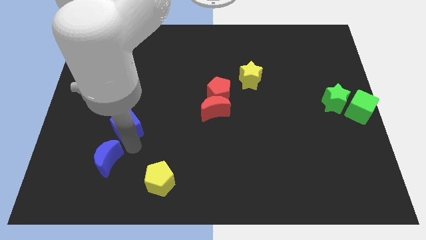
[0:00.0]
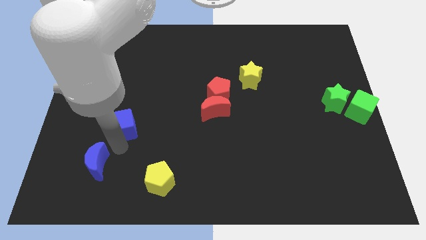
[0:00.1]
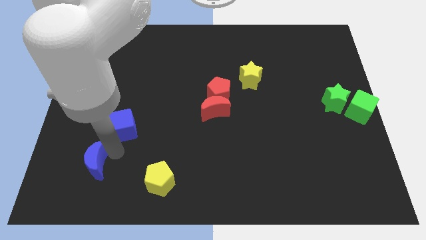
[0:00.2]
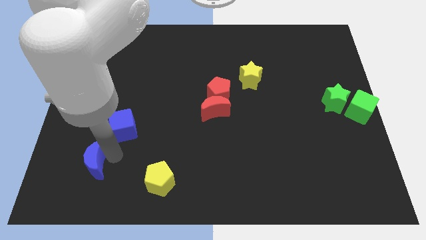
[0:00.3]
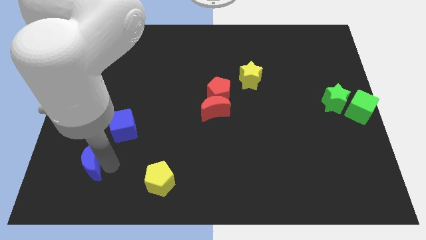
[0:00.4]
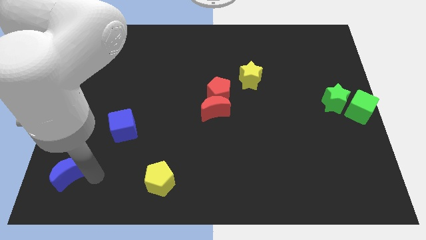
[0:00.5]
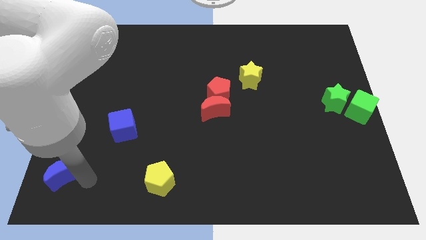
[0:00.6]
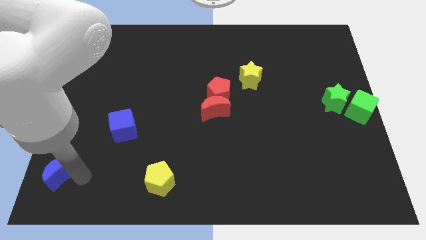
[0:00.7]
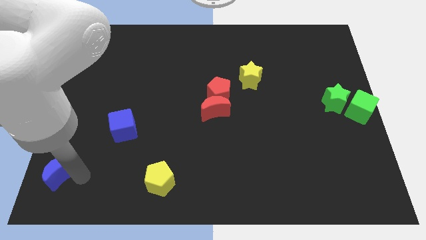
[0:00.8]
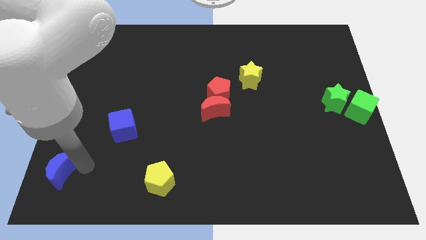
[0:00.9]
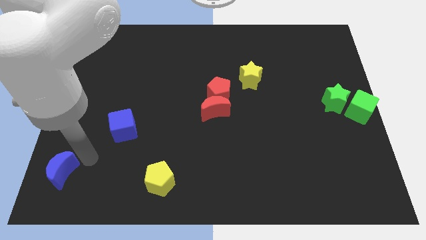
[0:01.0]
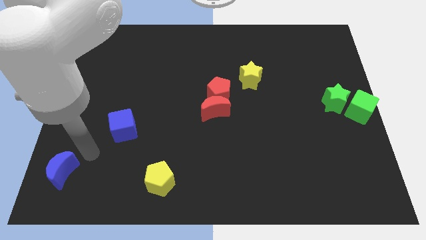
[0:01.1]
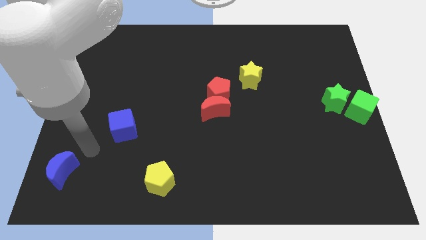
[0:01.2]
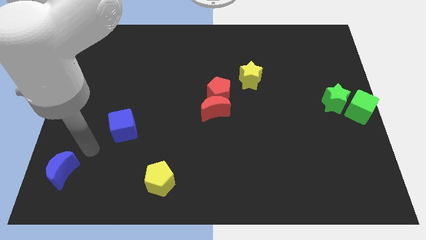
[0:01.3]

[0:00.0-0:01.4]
move the blue crescent to the bottom left to the board

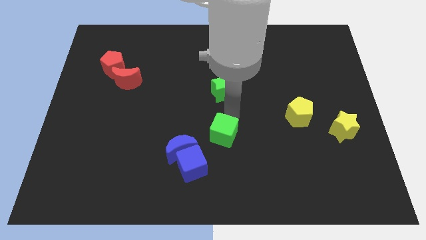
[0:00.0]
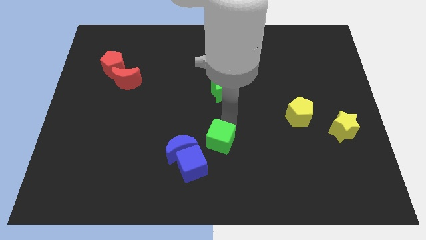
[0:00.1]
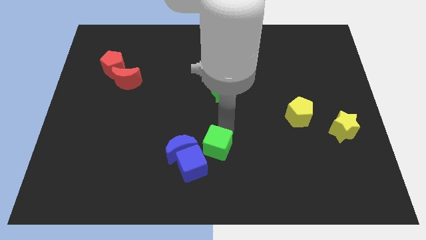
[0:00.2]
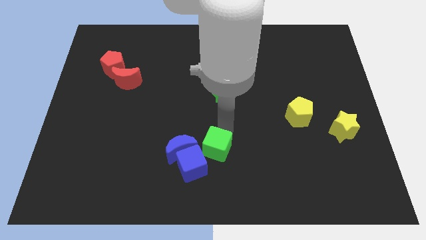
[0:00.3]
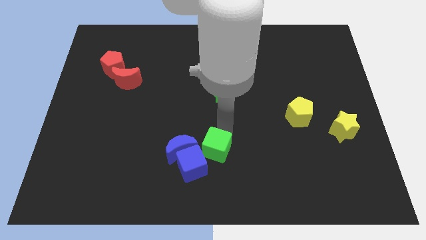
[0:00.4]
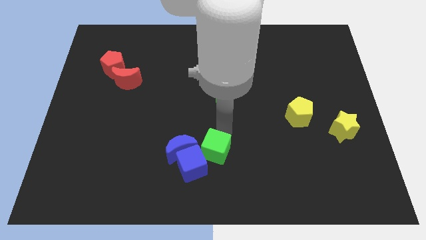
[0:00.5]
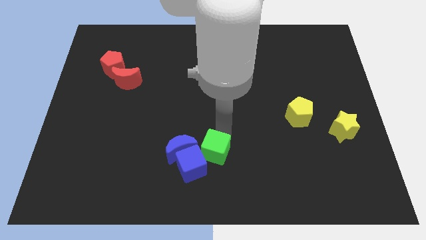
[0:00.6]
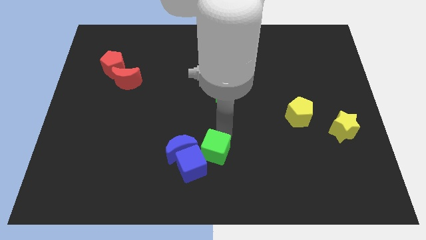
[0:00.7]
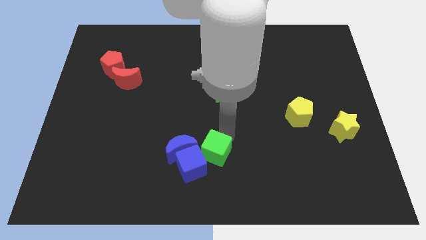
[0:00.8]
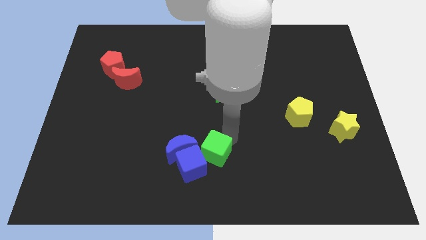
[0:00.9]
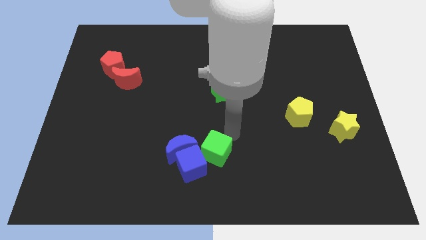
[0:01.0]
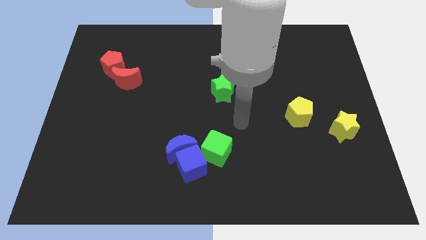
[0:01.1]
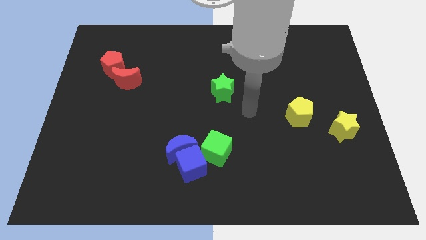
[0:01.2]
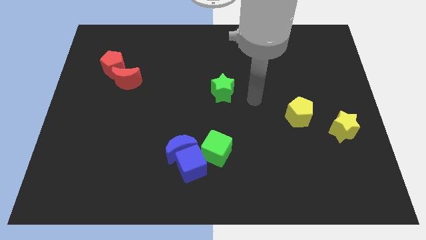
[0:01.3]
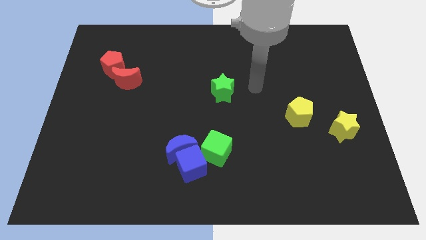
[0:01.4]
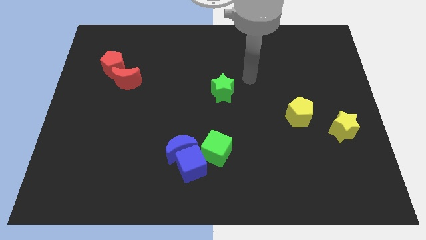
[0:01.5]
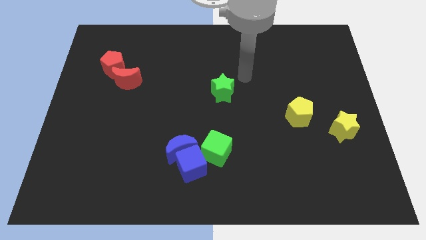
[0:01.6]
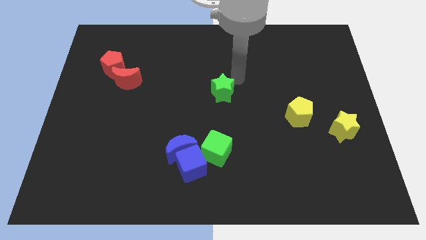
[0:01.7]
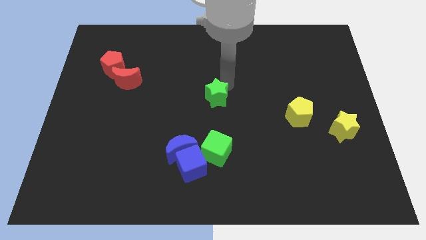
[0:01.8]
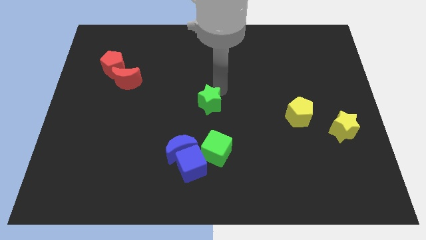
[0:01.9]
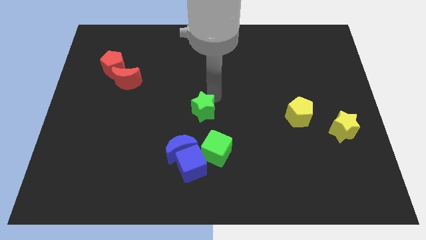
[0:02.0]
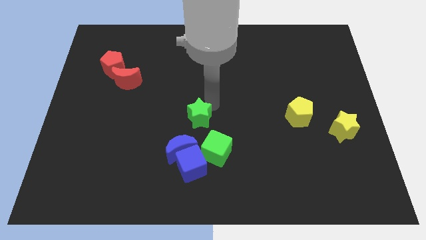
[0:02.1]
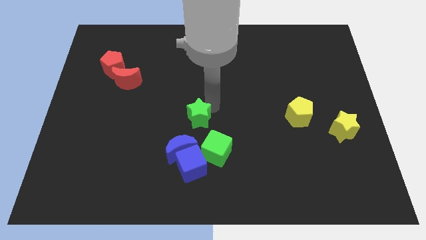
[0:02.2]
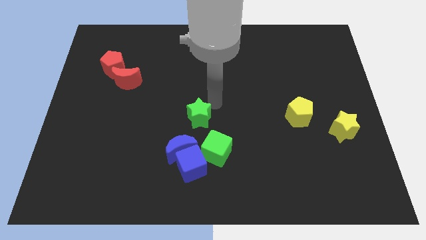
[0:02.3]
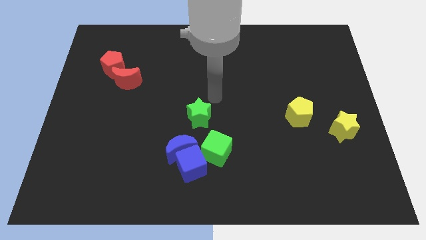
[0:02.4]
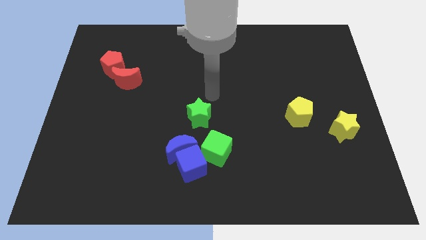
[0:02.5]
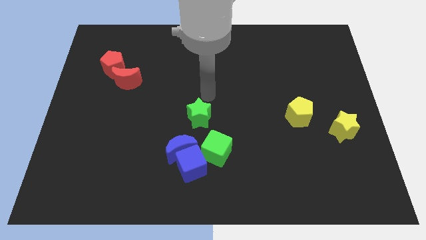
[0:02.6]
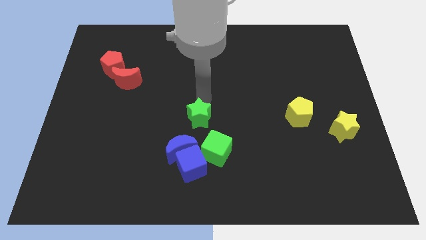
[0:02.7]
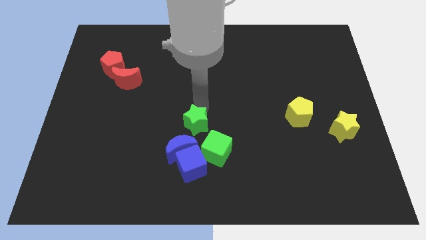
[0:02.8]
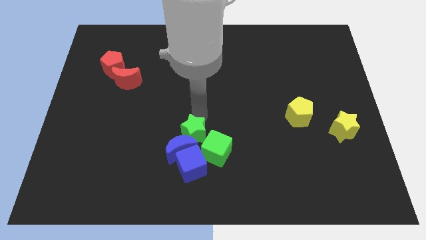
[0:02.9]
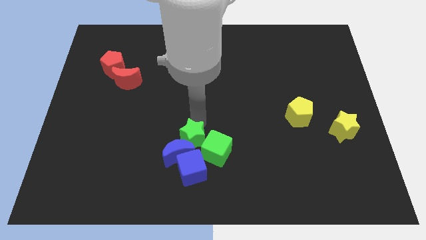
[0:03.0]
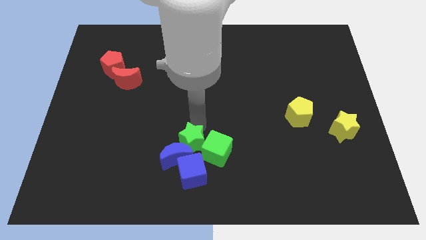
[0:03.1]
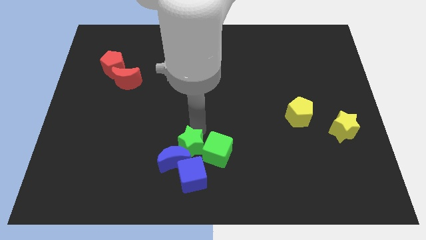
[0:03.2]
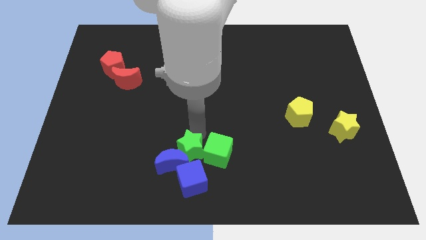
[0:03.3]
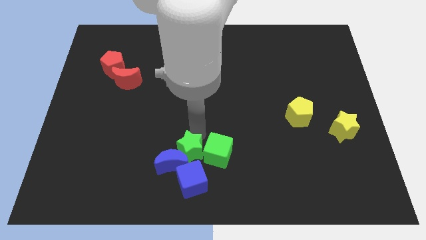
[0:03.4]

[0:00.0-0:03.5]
place the green star left to the green cube

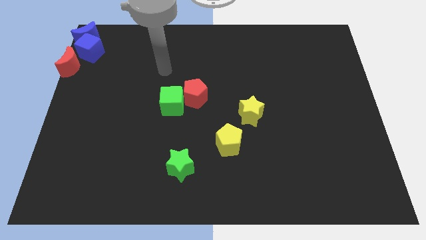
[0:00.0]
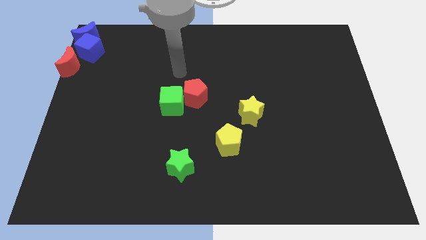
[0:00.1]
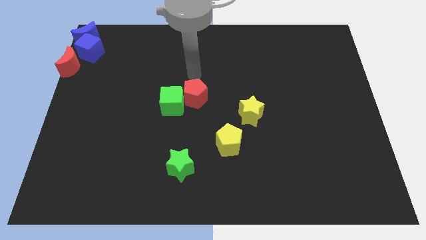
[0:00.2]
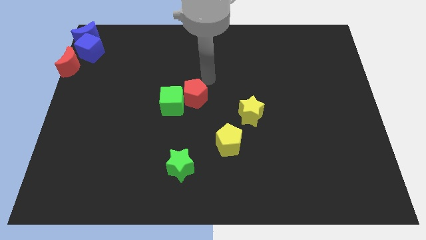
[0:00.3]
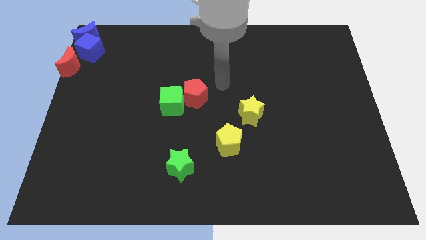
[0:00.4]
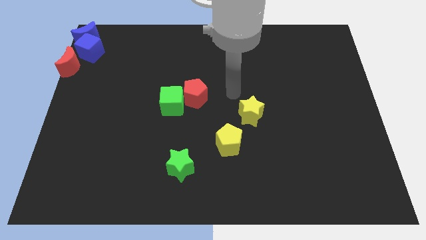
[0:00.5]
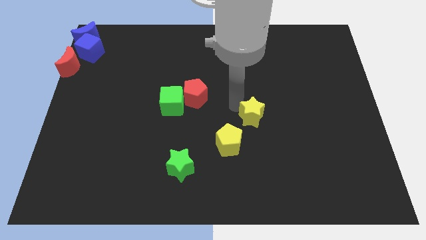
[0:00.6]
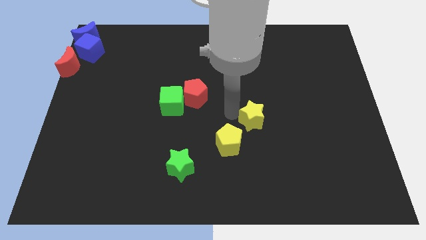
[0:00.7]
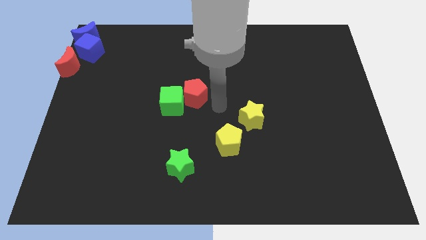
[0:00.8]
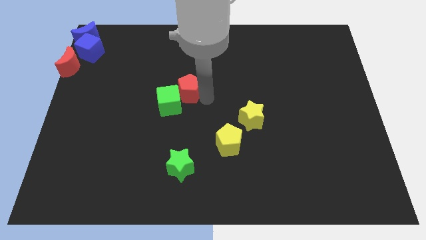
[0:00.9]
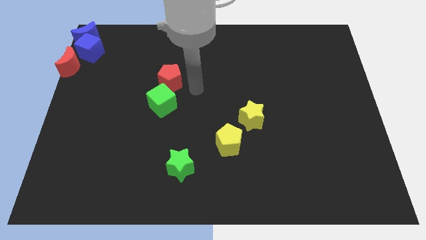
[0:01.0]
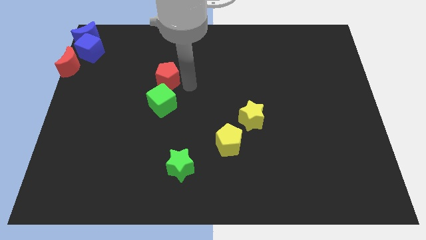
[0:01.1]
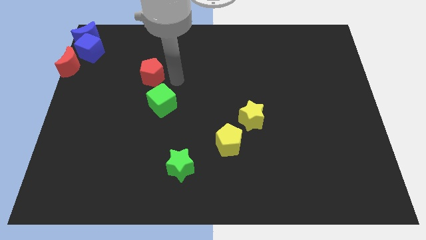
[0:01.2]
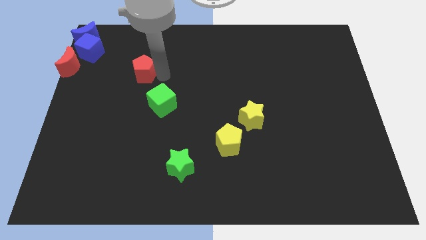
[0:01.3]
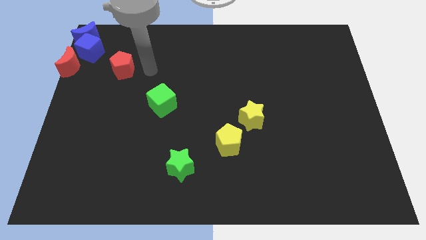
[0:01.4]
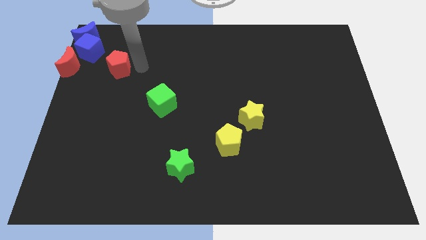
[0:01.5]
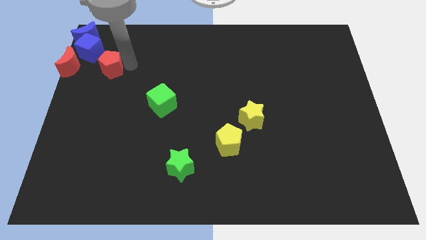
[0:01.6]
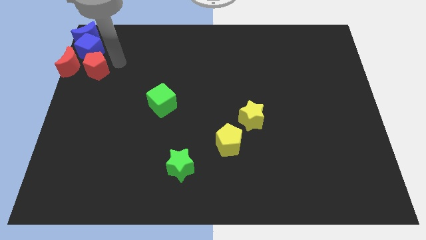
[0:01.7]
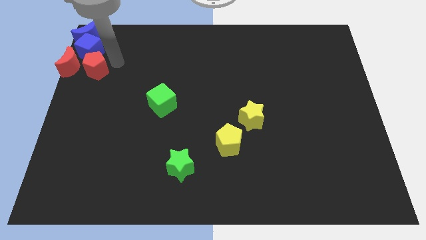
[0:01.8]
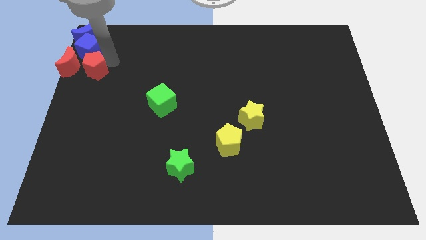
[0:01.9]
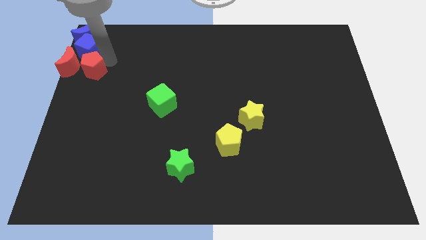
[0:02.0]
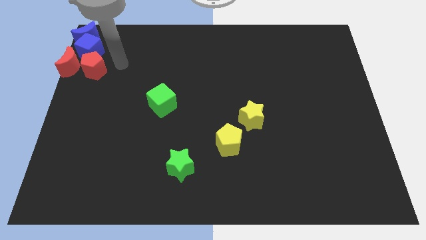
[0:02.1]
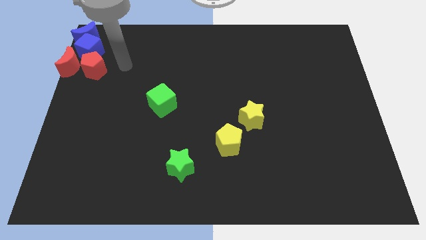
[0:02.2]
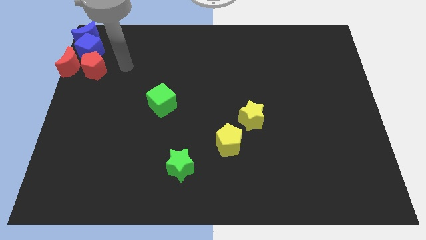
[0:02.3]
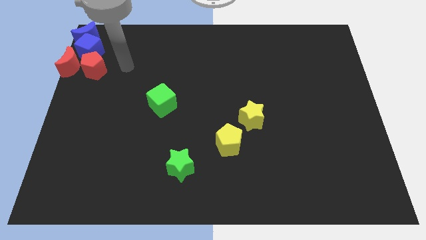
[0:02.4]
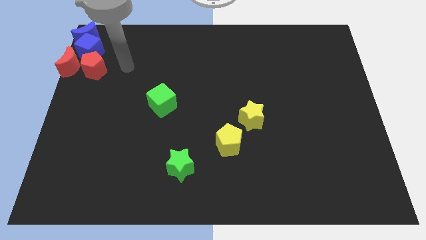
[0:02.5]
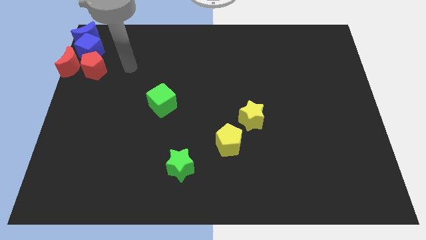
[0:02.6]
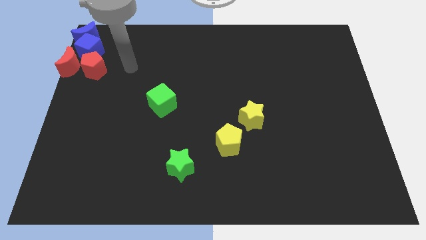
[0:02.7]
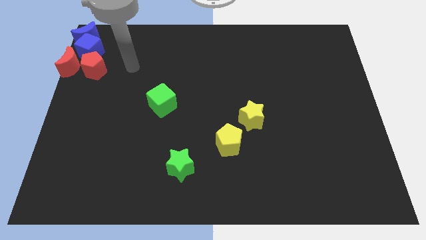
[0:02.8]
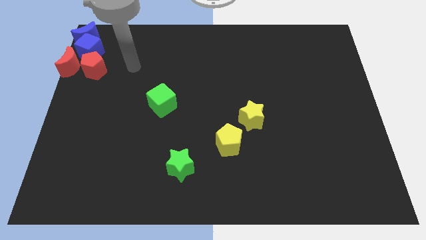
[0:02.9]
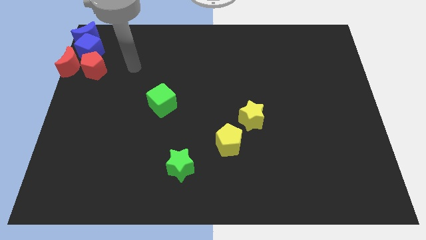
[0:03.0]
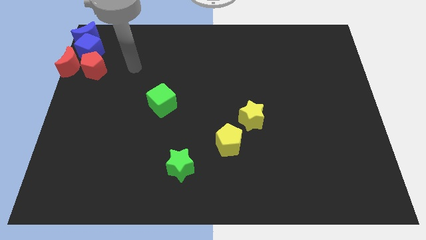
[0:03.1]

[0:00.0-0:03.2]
move the red pentagon into the red moon

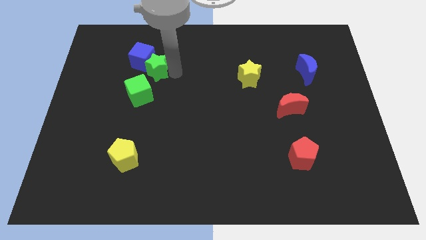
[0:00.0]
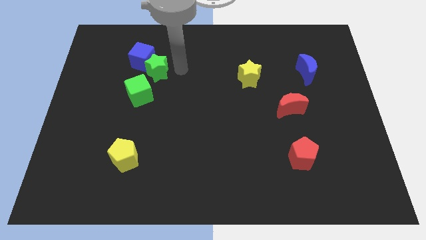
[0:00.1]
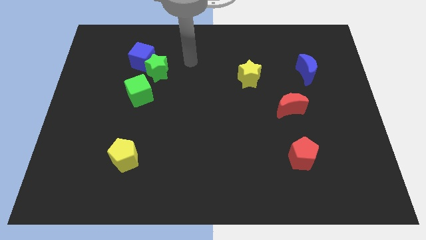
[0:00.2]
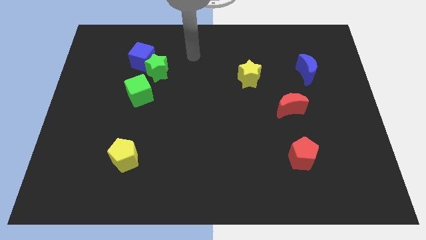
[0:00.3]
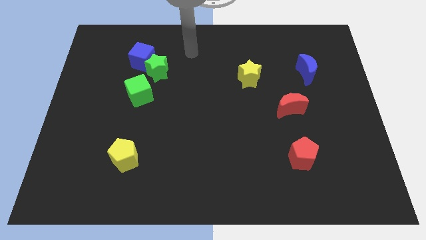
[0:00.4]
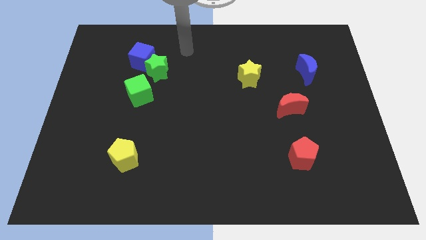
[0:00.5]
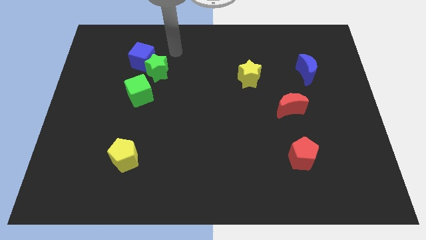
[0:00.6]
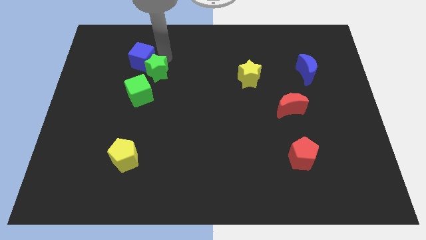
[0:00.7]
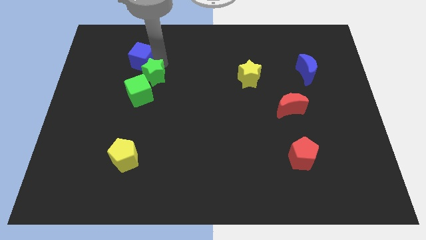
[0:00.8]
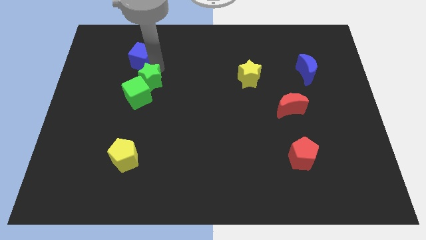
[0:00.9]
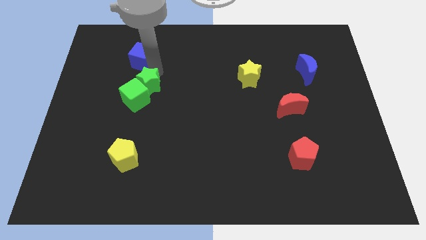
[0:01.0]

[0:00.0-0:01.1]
slide the green star into the green cube
